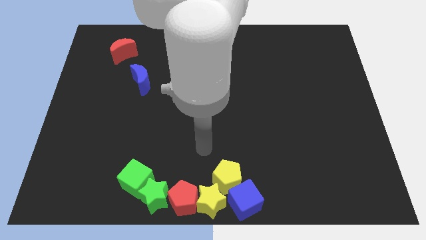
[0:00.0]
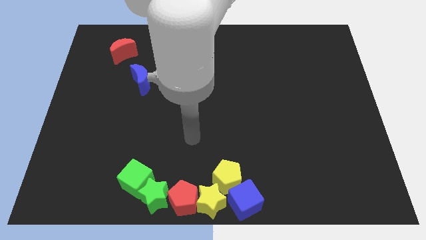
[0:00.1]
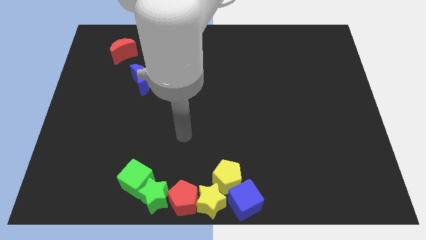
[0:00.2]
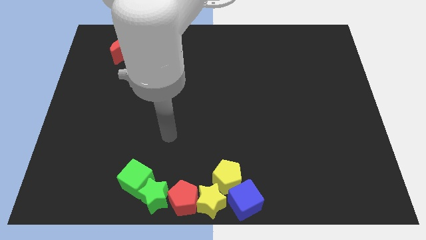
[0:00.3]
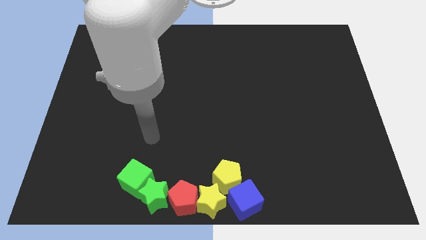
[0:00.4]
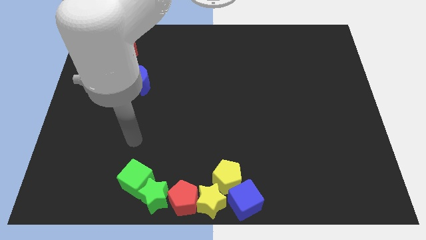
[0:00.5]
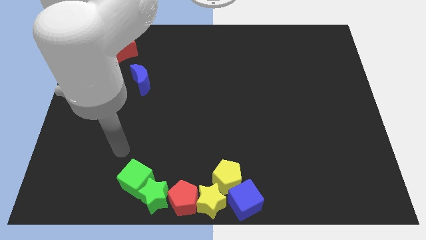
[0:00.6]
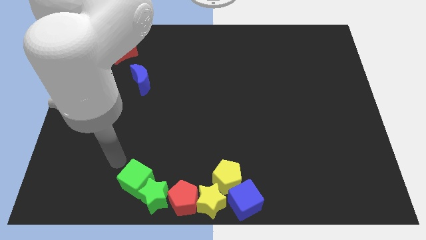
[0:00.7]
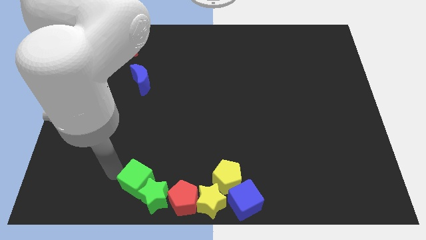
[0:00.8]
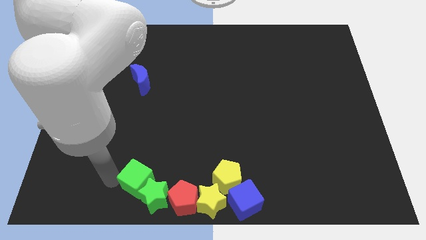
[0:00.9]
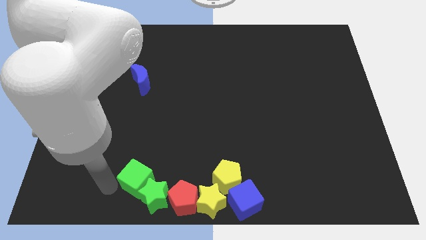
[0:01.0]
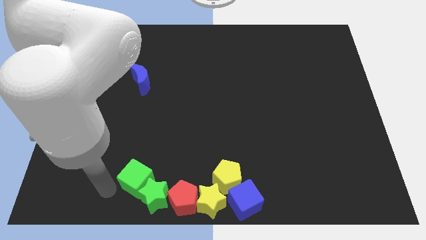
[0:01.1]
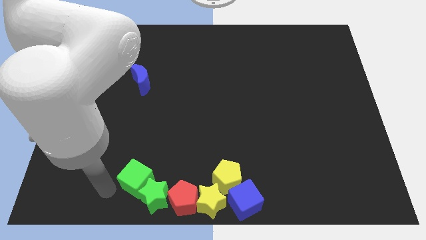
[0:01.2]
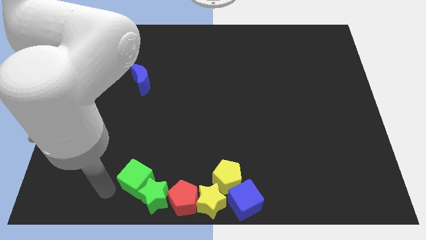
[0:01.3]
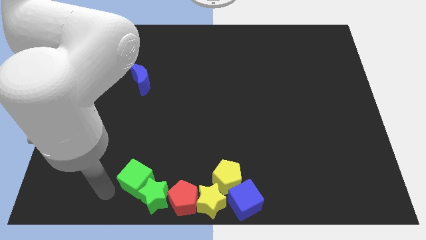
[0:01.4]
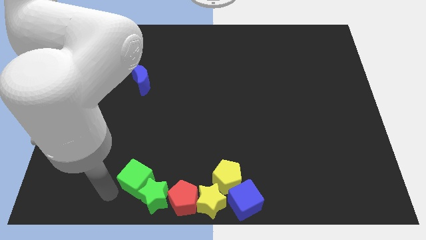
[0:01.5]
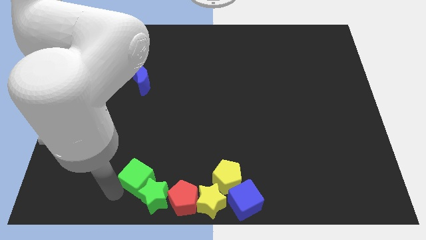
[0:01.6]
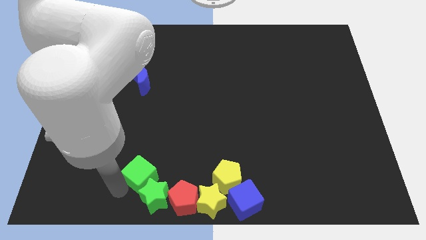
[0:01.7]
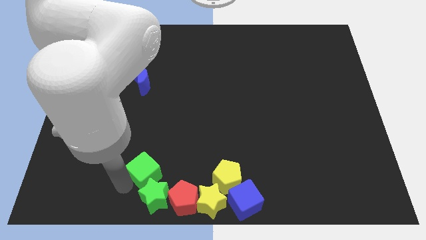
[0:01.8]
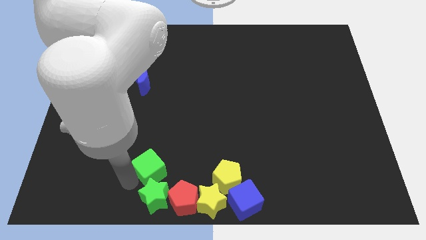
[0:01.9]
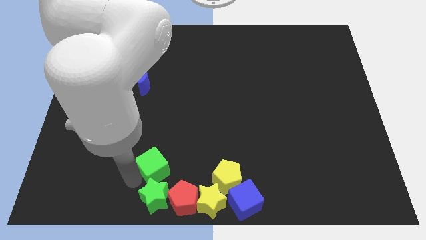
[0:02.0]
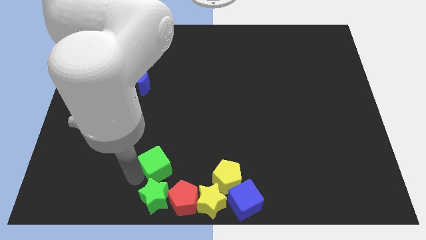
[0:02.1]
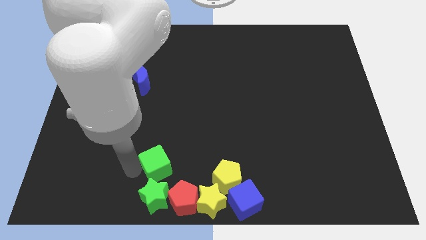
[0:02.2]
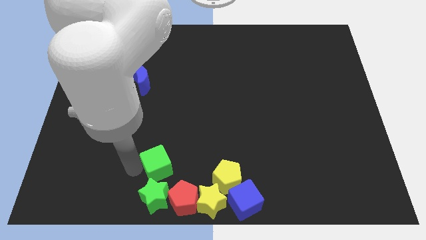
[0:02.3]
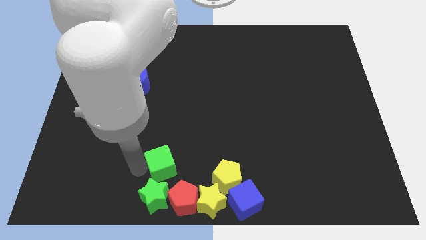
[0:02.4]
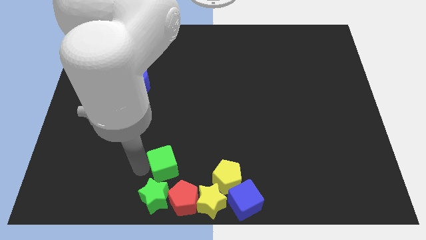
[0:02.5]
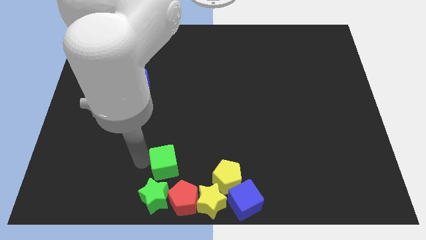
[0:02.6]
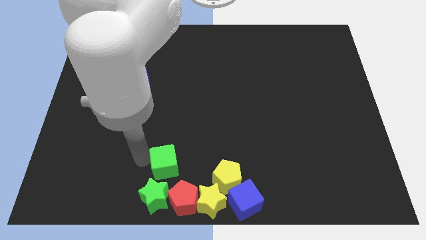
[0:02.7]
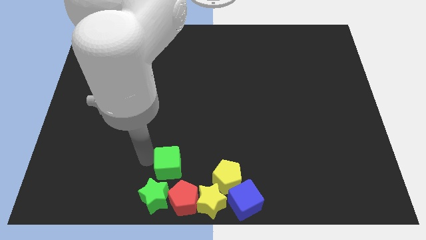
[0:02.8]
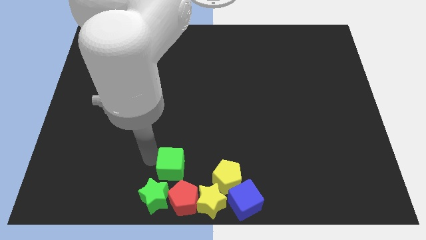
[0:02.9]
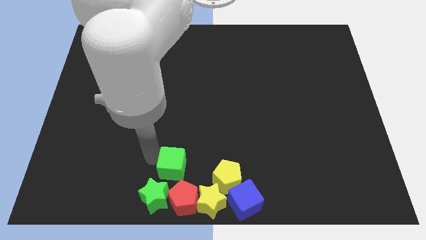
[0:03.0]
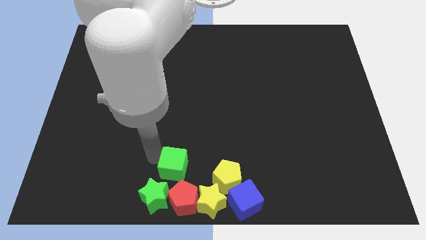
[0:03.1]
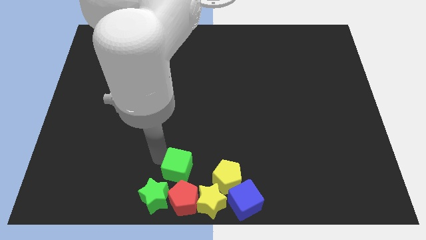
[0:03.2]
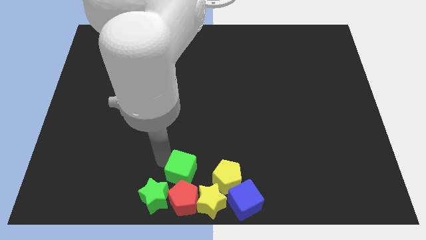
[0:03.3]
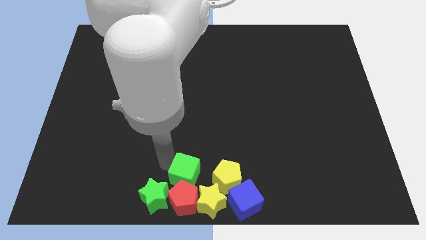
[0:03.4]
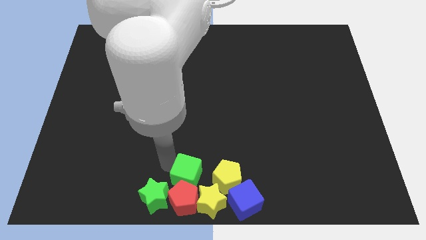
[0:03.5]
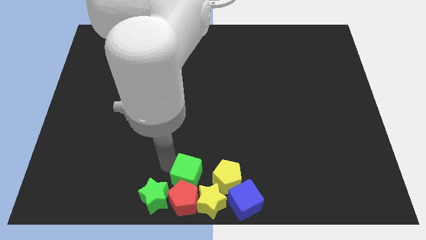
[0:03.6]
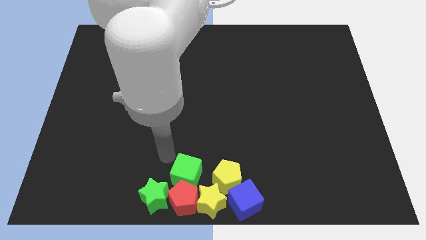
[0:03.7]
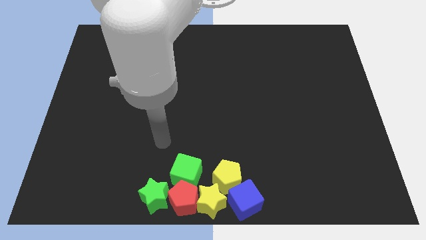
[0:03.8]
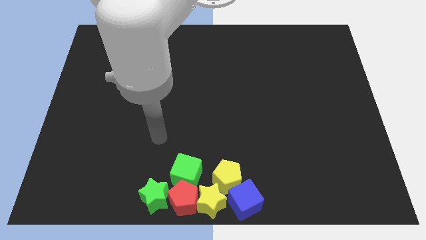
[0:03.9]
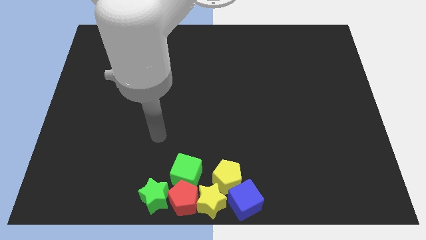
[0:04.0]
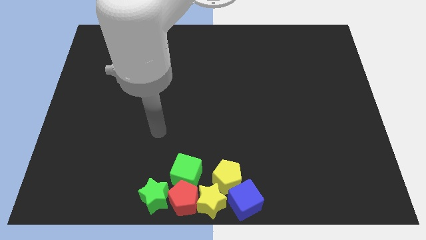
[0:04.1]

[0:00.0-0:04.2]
place the green cube above the red pentagon

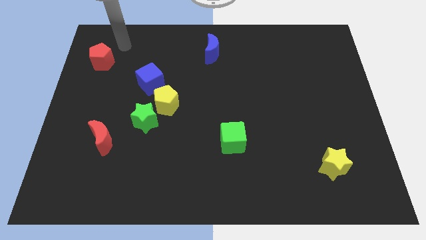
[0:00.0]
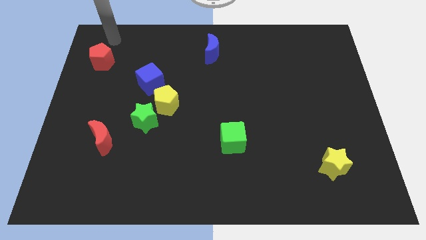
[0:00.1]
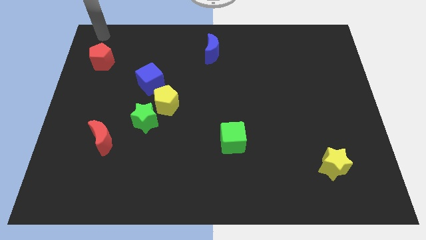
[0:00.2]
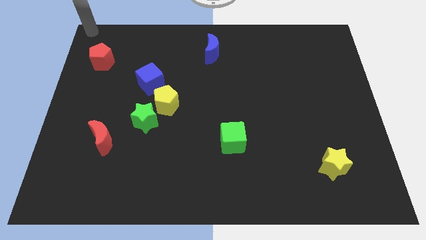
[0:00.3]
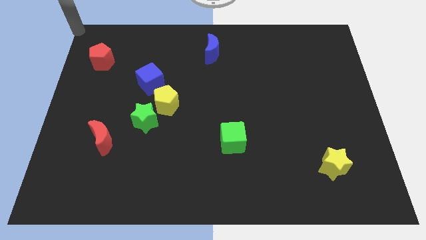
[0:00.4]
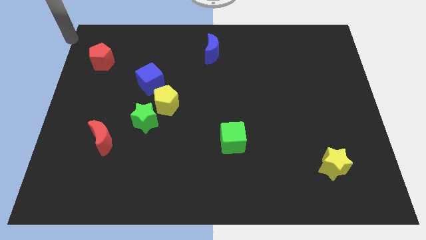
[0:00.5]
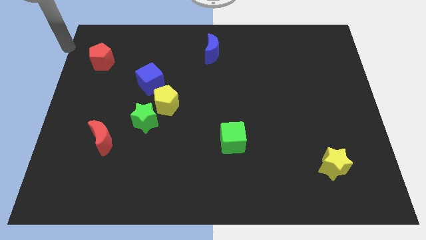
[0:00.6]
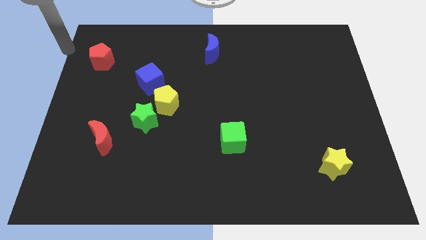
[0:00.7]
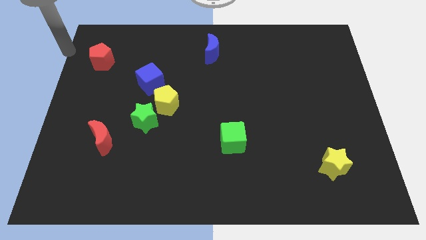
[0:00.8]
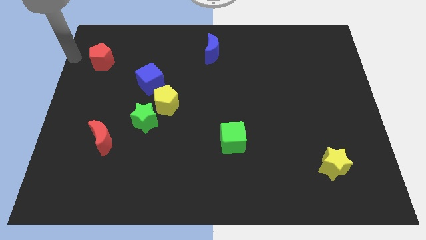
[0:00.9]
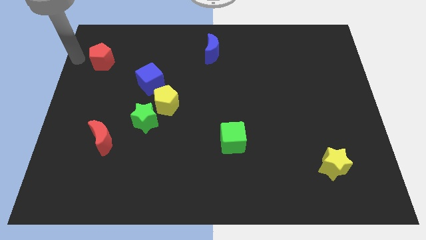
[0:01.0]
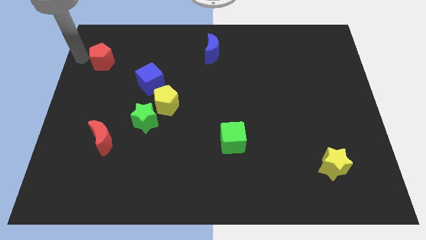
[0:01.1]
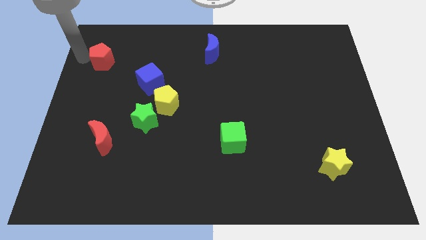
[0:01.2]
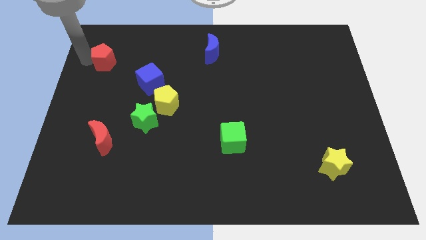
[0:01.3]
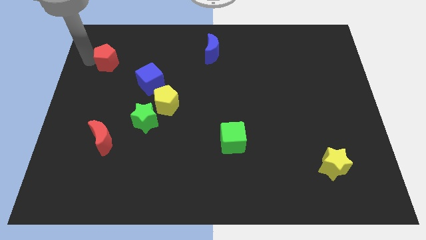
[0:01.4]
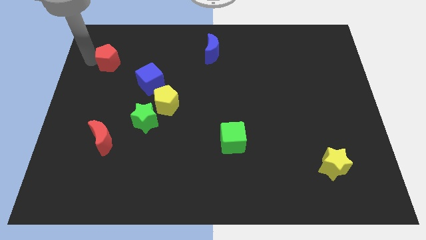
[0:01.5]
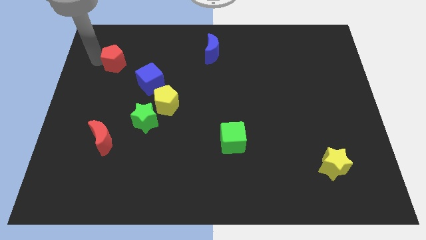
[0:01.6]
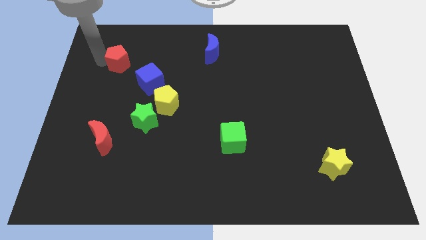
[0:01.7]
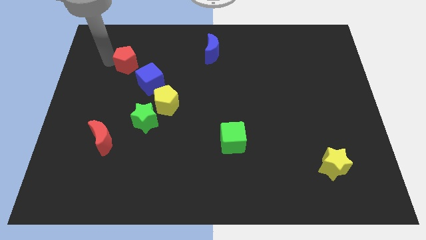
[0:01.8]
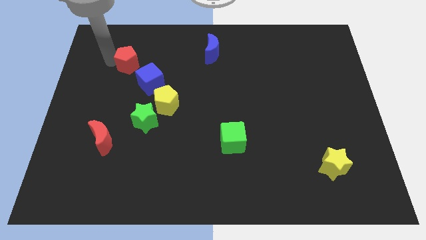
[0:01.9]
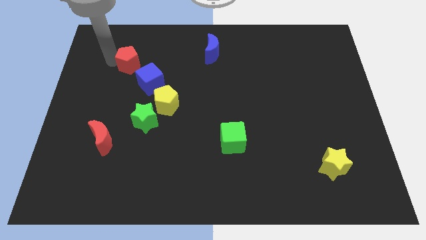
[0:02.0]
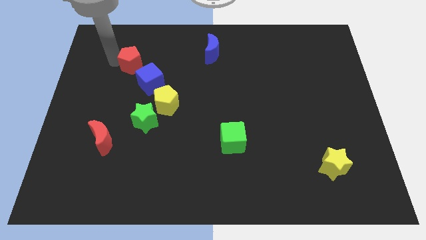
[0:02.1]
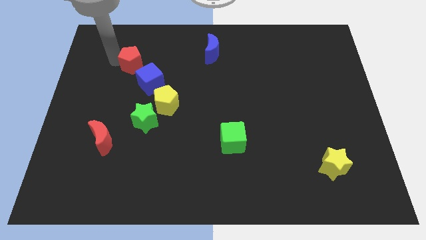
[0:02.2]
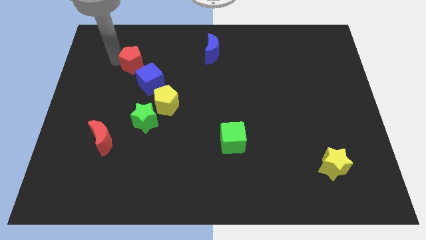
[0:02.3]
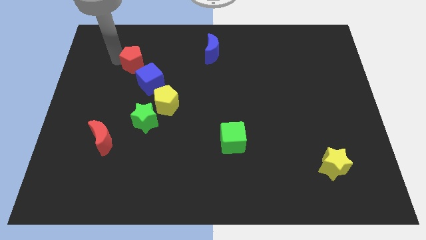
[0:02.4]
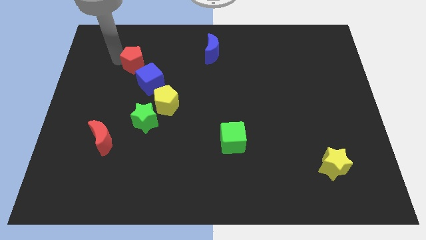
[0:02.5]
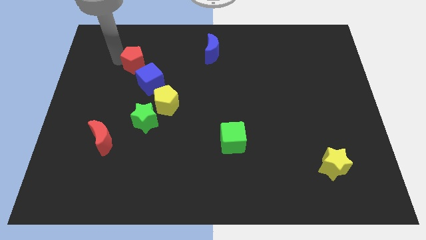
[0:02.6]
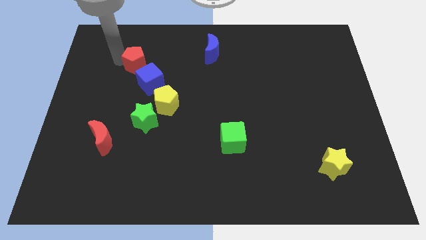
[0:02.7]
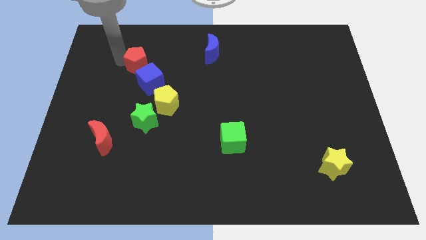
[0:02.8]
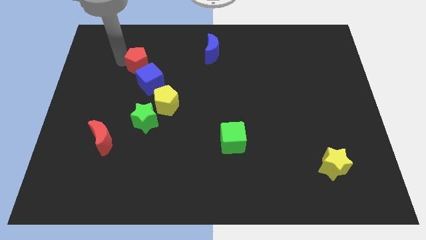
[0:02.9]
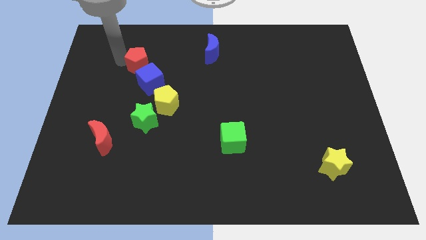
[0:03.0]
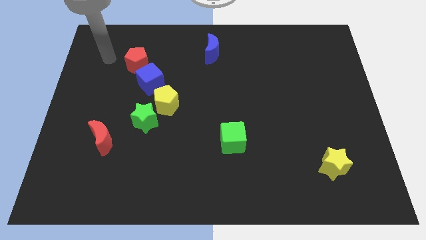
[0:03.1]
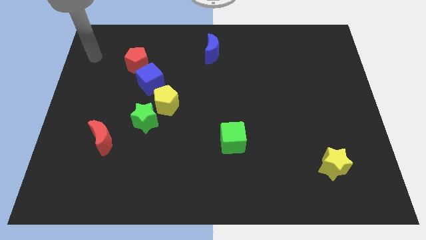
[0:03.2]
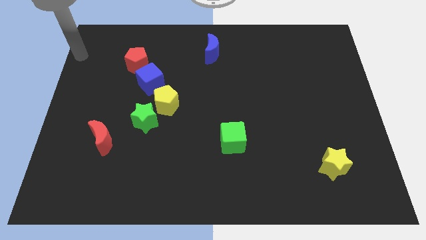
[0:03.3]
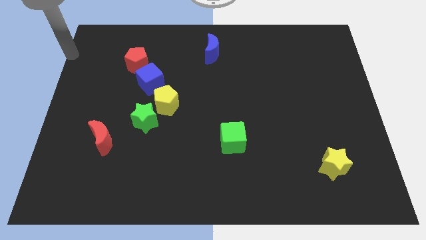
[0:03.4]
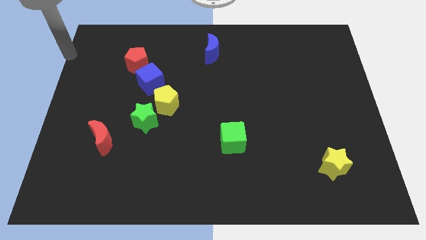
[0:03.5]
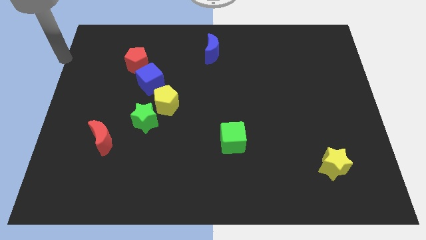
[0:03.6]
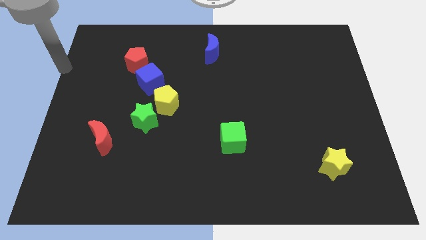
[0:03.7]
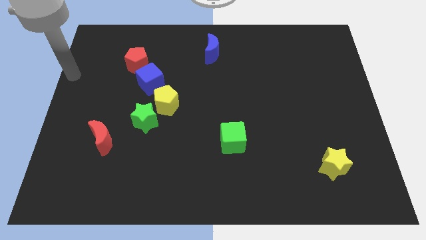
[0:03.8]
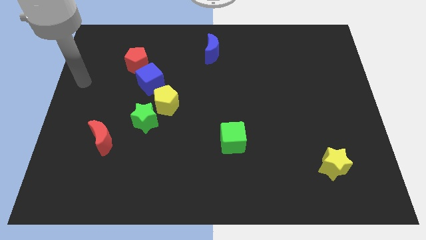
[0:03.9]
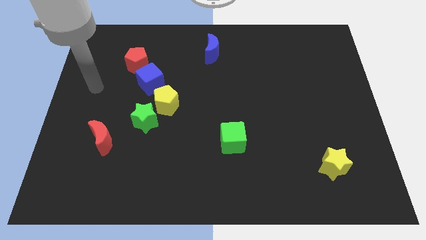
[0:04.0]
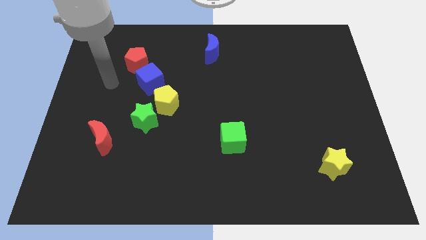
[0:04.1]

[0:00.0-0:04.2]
push red pentagon into blue cube

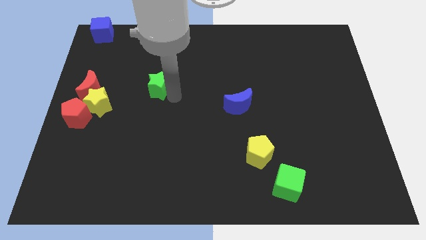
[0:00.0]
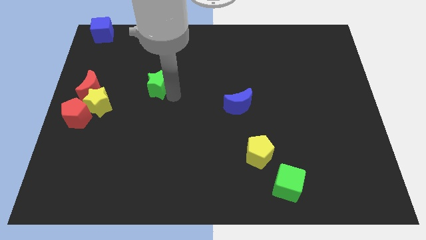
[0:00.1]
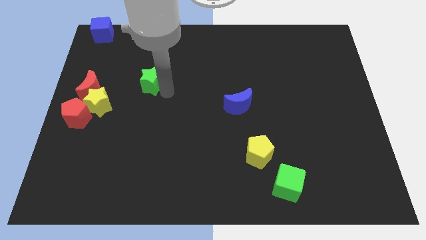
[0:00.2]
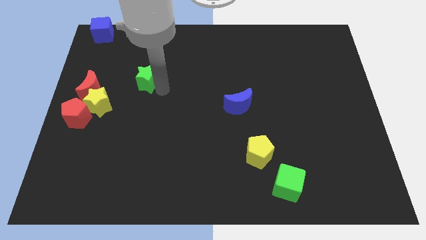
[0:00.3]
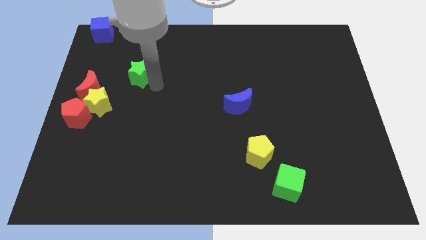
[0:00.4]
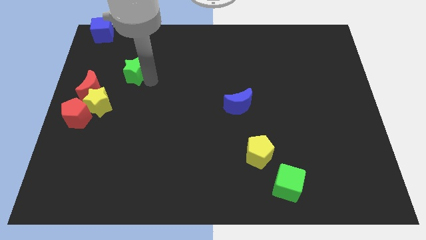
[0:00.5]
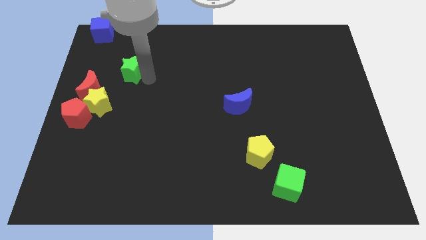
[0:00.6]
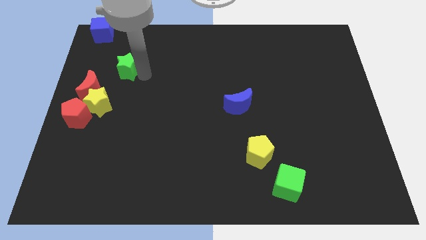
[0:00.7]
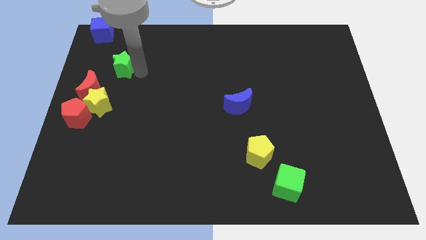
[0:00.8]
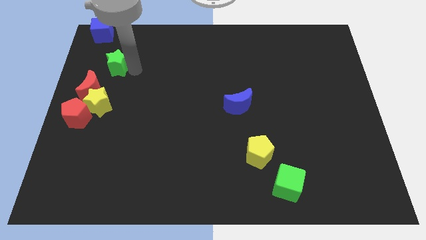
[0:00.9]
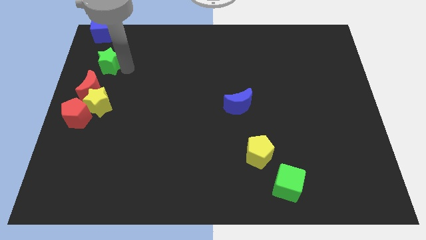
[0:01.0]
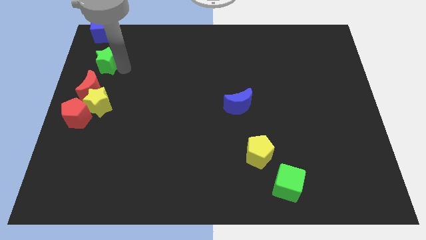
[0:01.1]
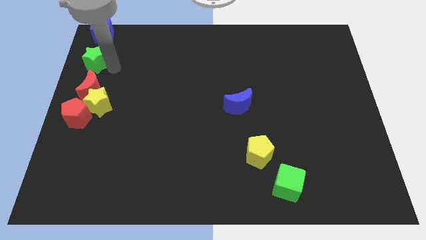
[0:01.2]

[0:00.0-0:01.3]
push the green star above the red crescent
